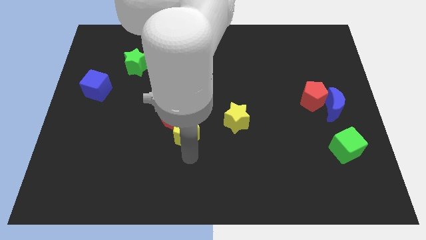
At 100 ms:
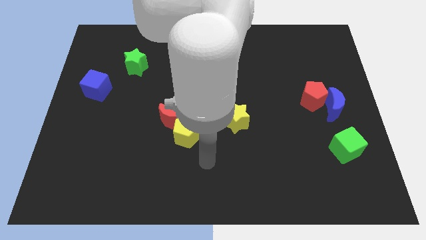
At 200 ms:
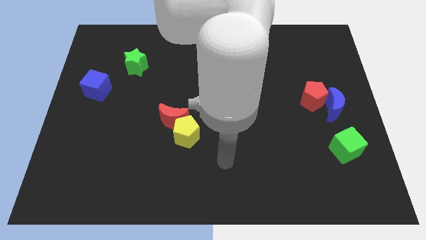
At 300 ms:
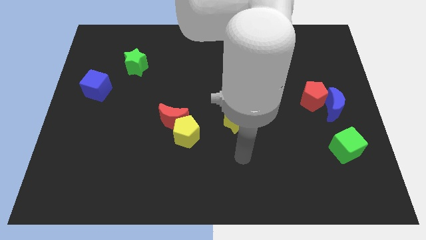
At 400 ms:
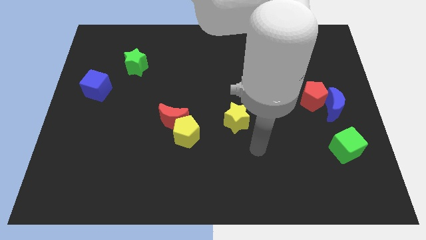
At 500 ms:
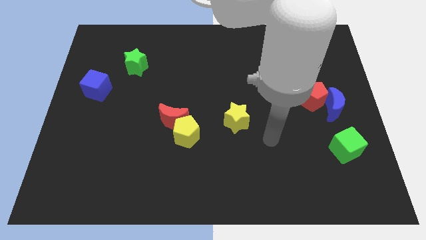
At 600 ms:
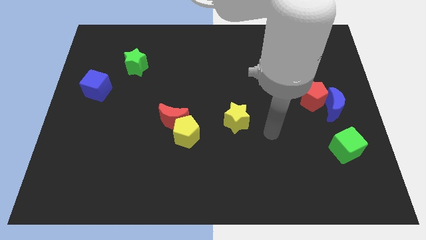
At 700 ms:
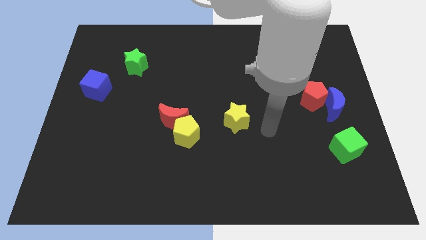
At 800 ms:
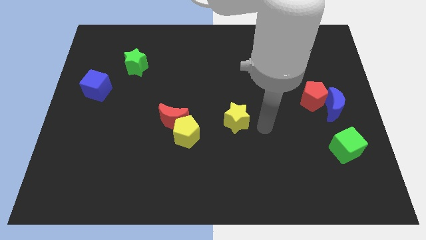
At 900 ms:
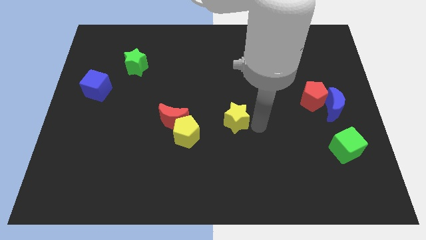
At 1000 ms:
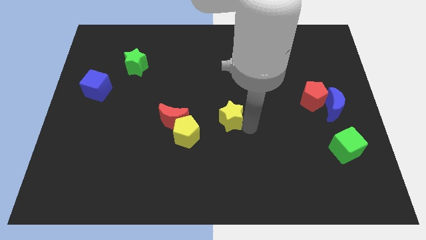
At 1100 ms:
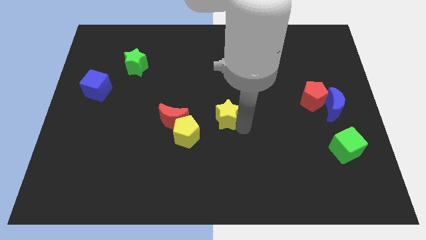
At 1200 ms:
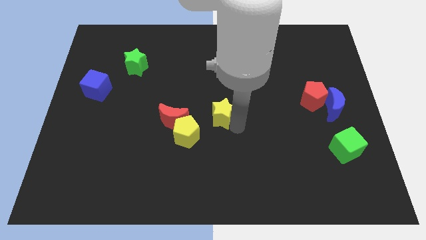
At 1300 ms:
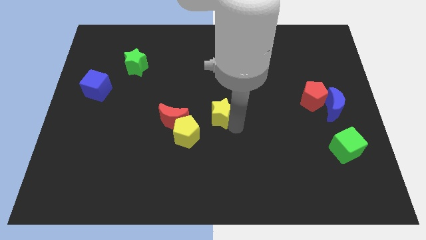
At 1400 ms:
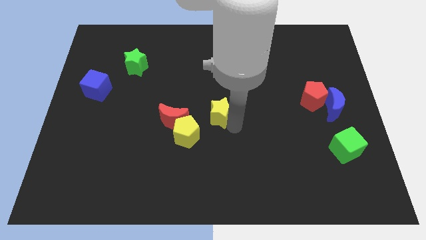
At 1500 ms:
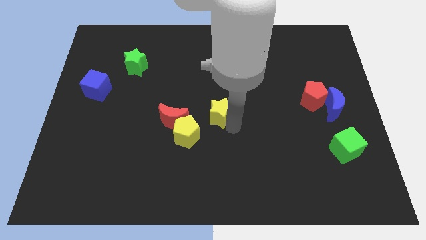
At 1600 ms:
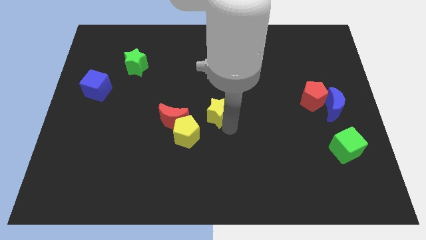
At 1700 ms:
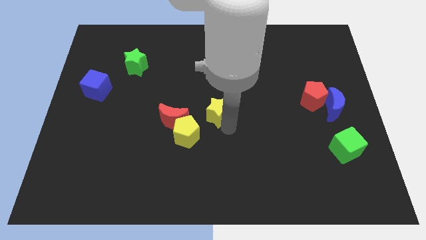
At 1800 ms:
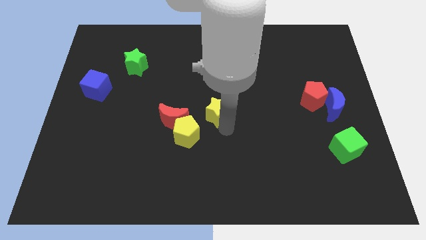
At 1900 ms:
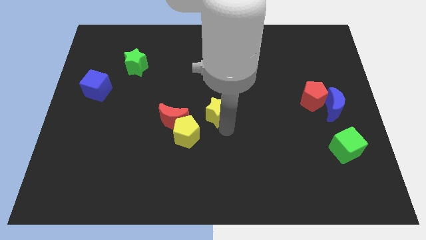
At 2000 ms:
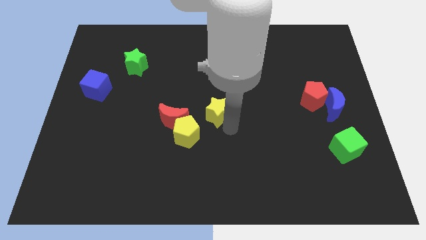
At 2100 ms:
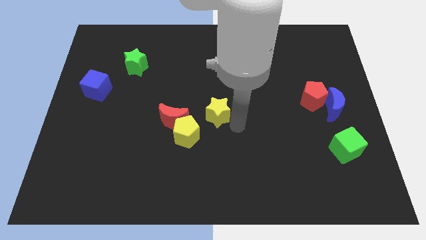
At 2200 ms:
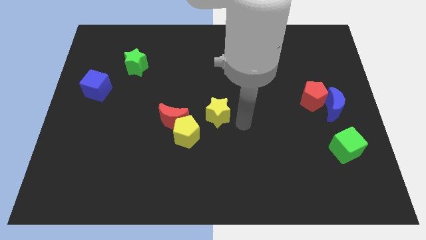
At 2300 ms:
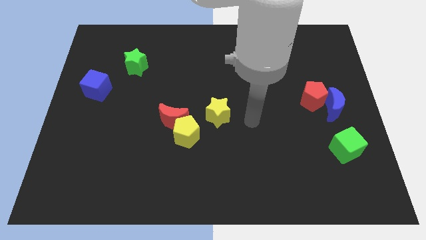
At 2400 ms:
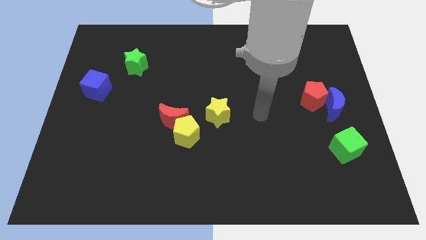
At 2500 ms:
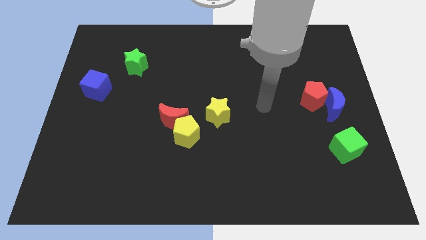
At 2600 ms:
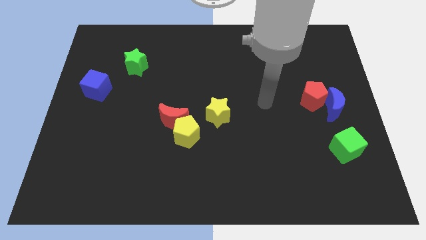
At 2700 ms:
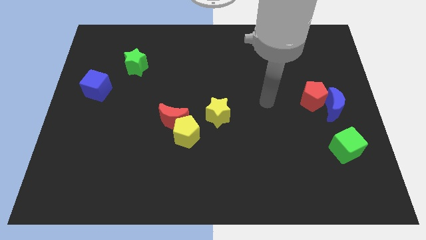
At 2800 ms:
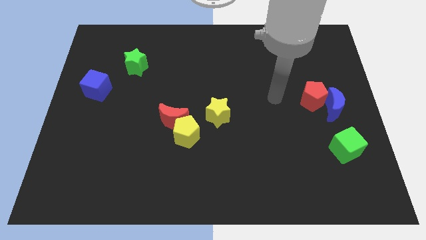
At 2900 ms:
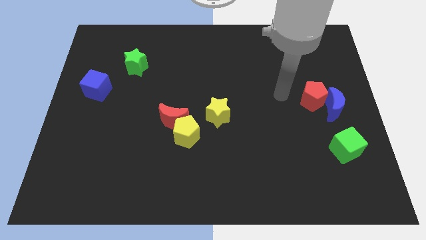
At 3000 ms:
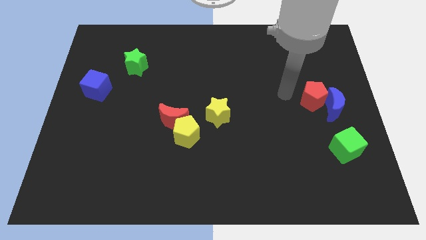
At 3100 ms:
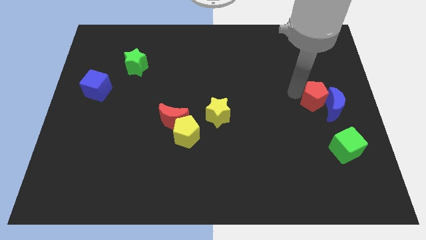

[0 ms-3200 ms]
move the yellow star slightly to the left

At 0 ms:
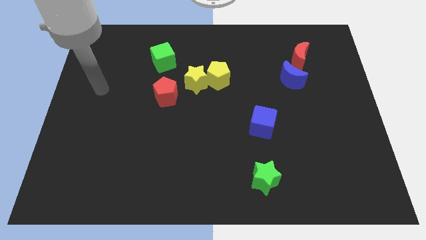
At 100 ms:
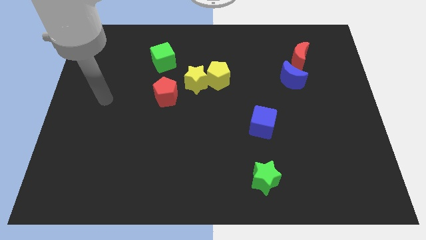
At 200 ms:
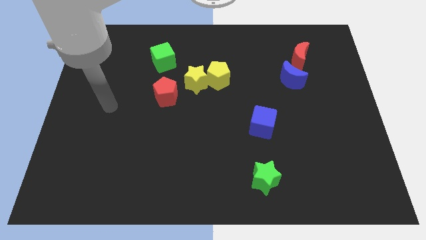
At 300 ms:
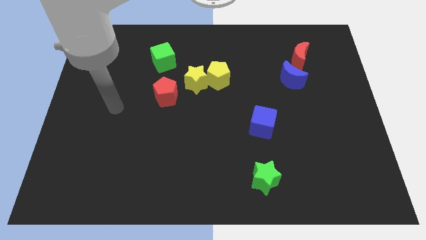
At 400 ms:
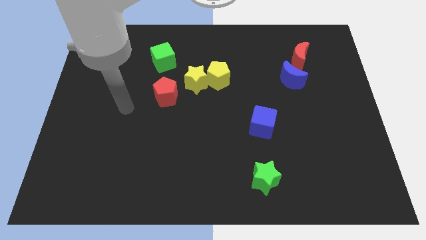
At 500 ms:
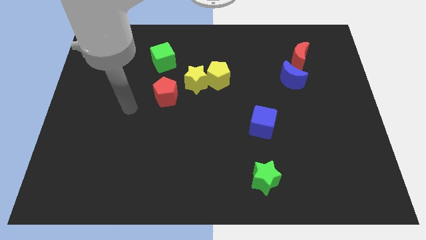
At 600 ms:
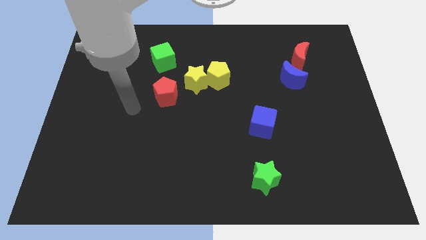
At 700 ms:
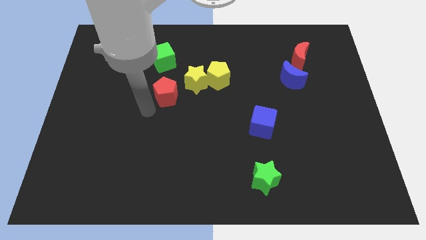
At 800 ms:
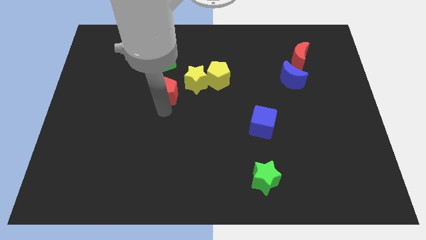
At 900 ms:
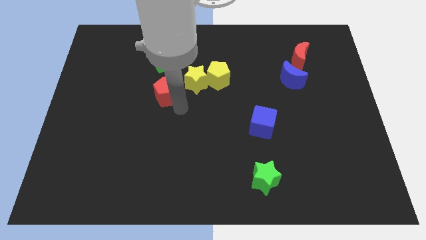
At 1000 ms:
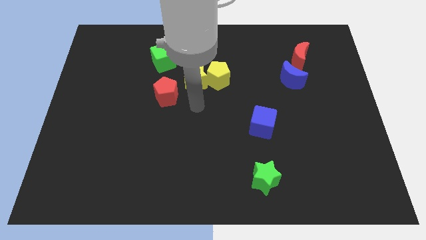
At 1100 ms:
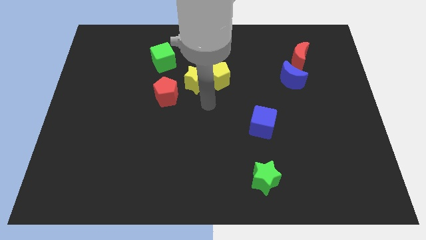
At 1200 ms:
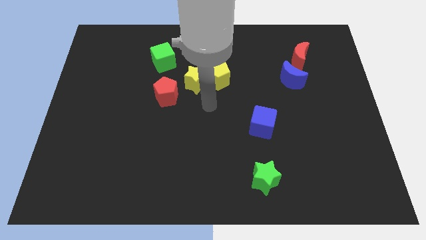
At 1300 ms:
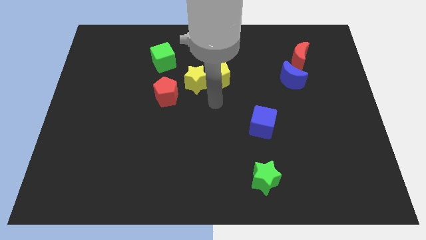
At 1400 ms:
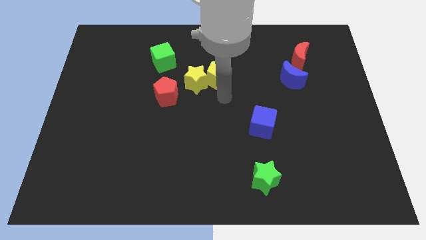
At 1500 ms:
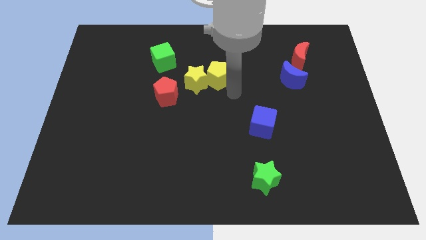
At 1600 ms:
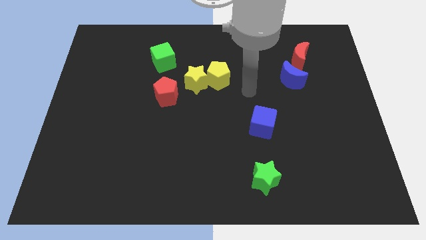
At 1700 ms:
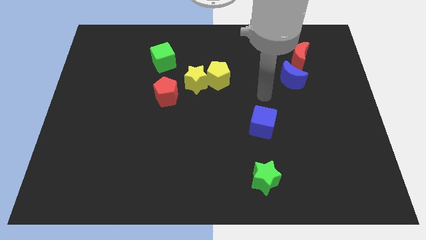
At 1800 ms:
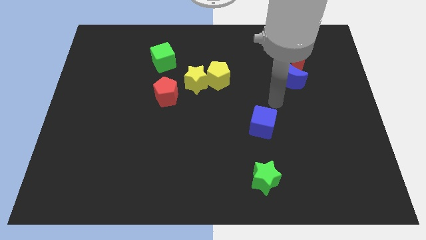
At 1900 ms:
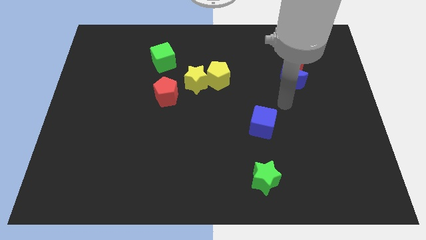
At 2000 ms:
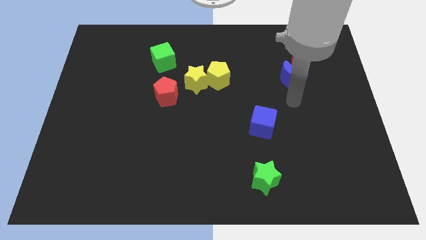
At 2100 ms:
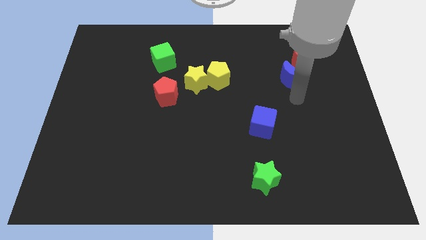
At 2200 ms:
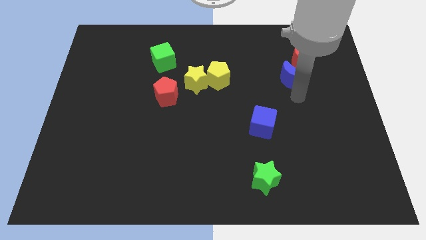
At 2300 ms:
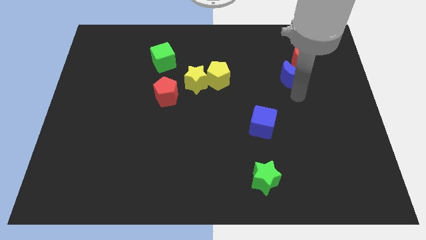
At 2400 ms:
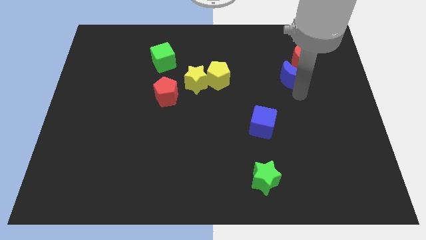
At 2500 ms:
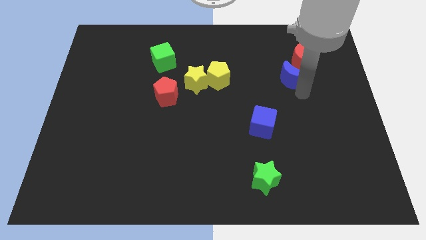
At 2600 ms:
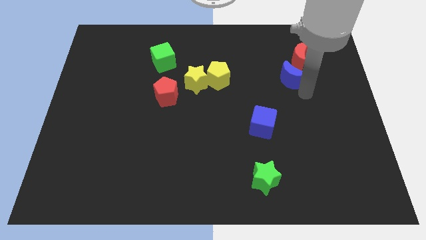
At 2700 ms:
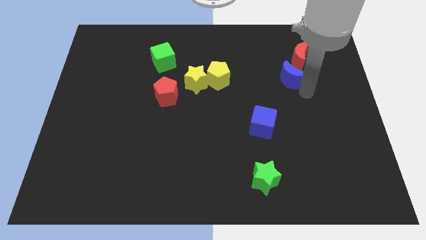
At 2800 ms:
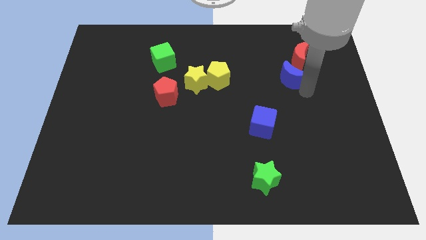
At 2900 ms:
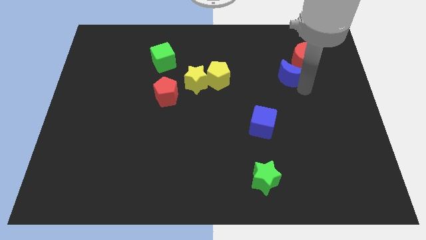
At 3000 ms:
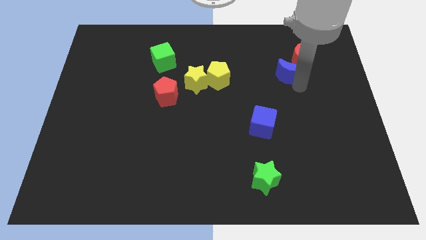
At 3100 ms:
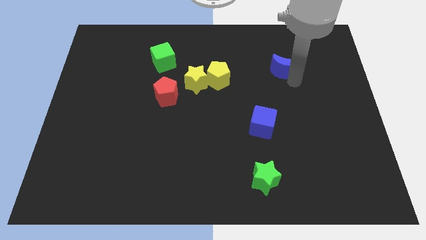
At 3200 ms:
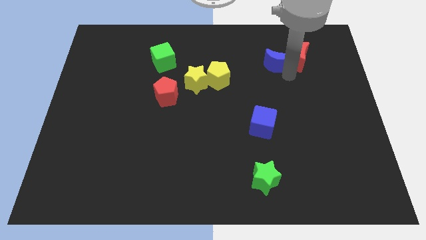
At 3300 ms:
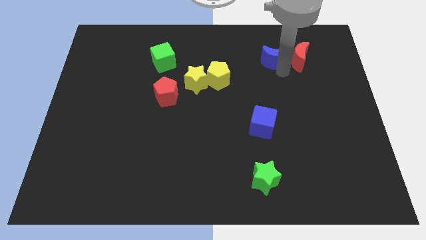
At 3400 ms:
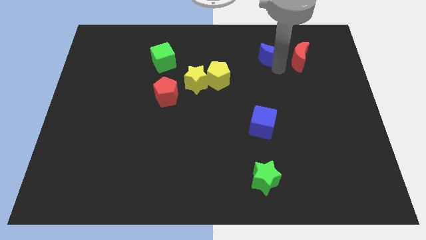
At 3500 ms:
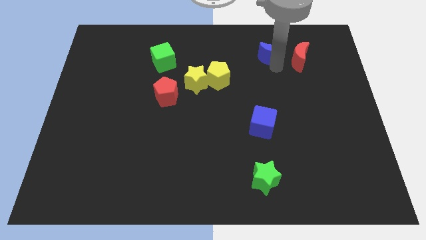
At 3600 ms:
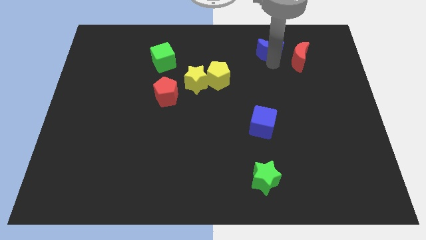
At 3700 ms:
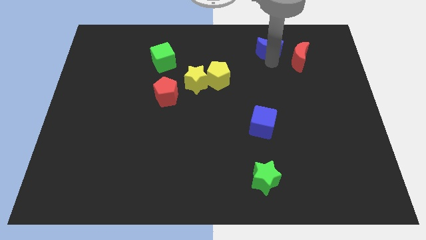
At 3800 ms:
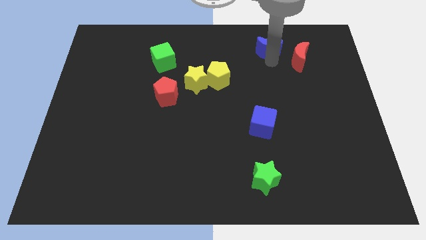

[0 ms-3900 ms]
move the blue moon to the top center

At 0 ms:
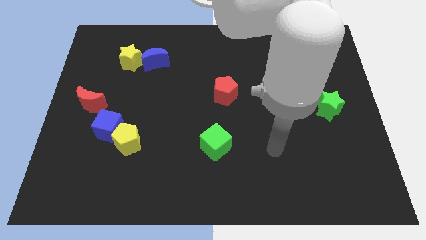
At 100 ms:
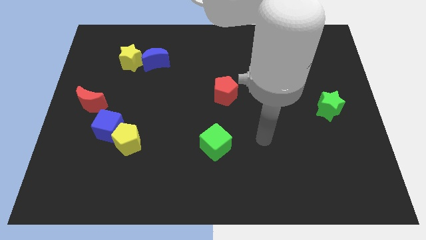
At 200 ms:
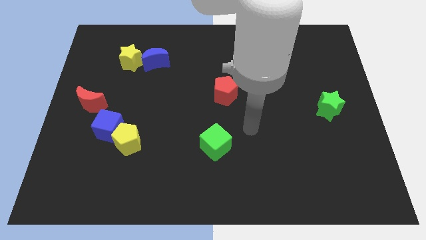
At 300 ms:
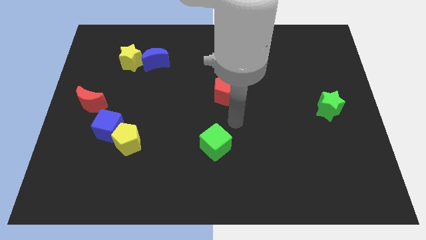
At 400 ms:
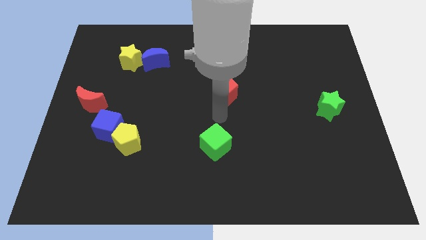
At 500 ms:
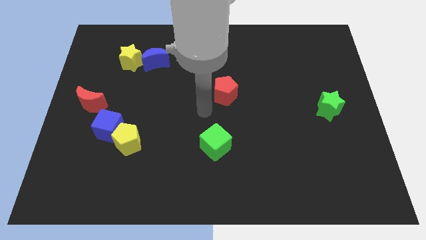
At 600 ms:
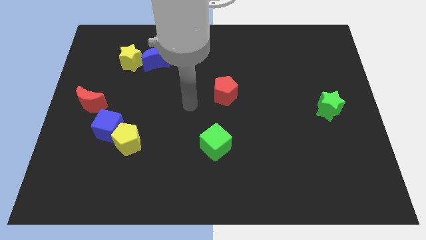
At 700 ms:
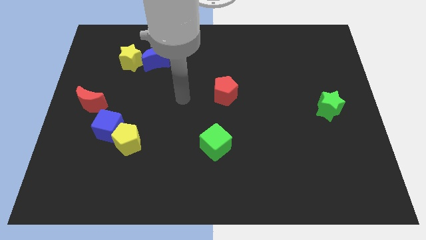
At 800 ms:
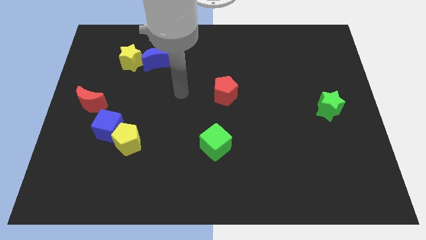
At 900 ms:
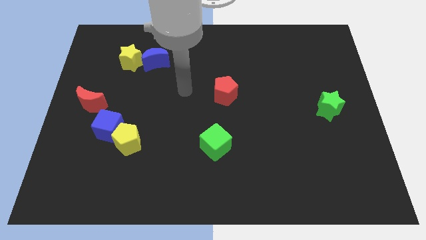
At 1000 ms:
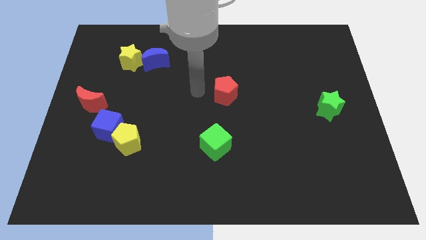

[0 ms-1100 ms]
point your arm at the left of the red pentagon

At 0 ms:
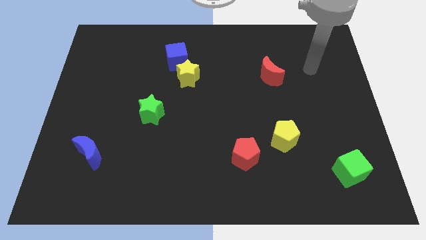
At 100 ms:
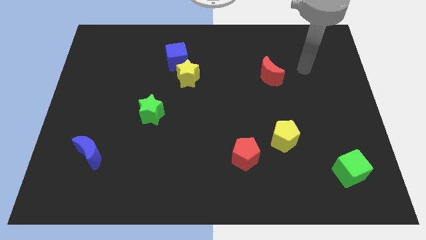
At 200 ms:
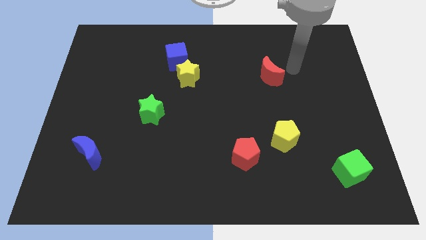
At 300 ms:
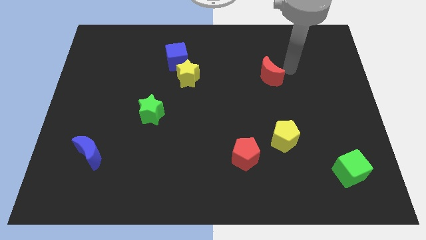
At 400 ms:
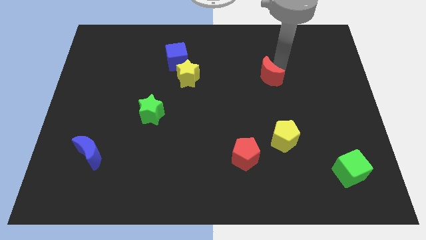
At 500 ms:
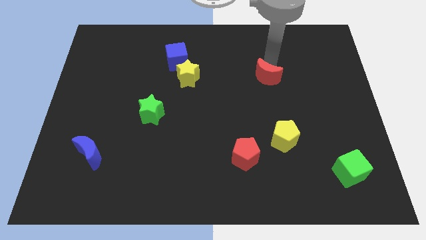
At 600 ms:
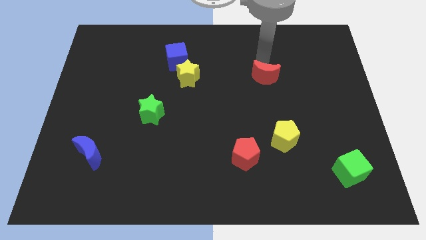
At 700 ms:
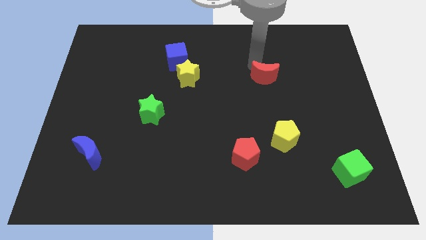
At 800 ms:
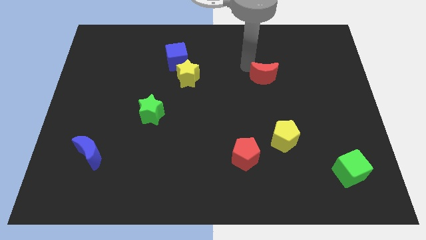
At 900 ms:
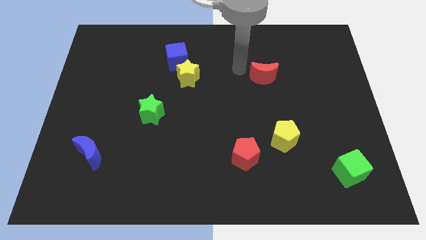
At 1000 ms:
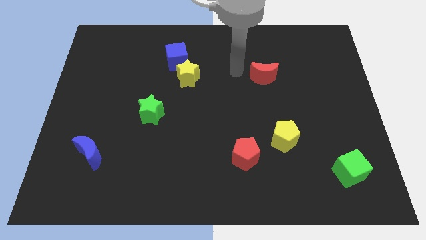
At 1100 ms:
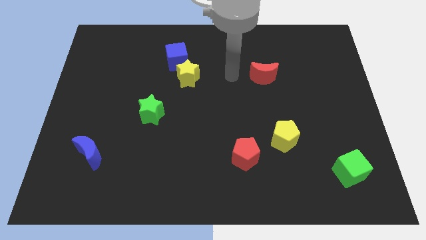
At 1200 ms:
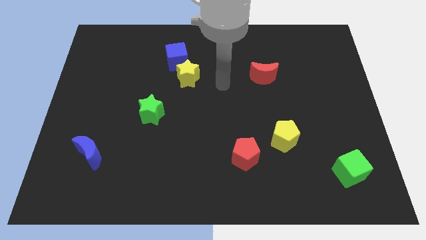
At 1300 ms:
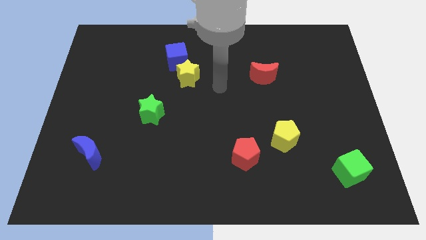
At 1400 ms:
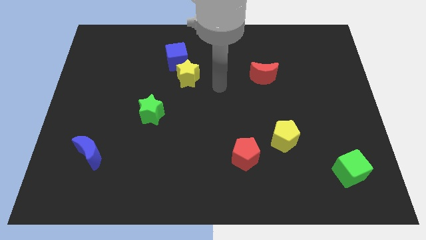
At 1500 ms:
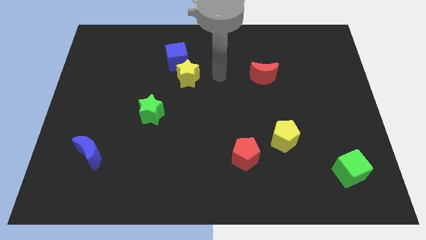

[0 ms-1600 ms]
place your arm in between the yellow star and red moon
